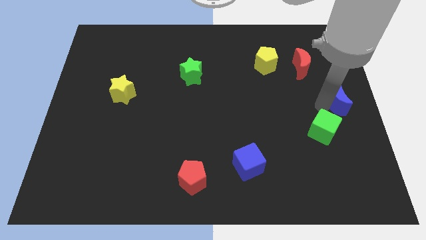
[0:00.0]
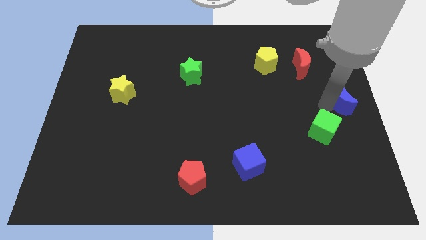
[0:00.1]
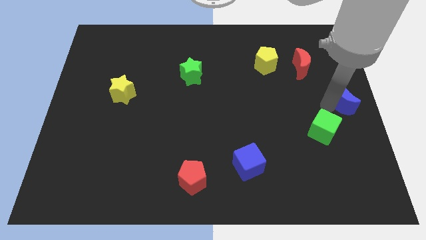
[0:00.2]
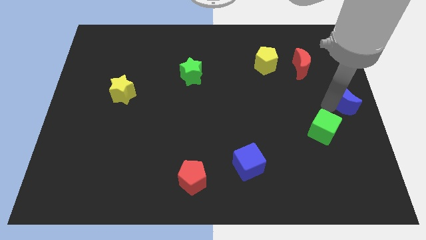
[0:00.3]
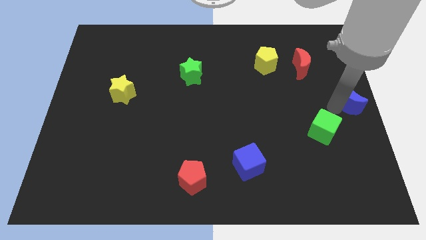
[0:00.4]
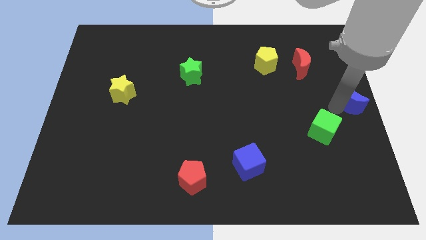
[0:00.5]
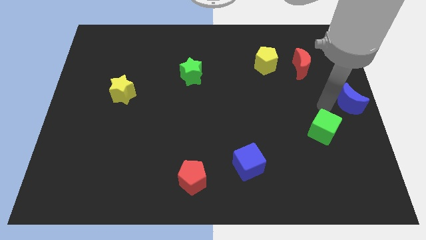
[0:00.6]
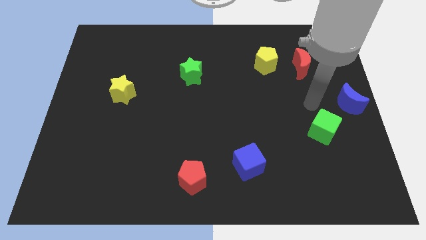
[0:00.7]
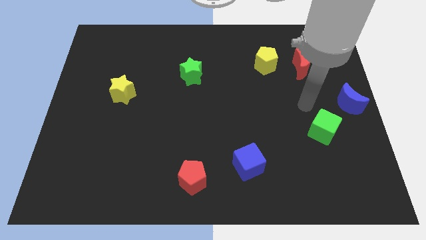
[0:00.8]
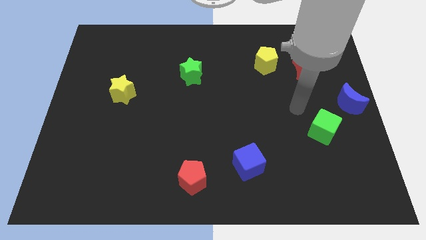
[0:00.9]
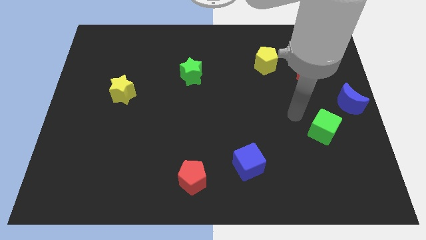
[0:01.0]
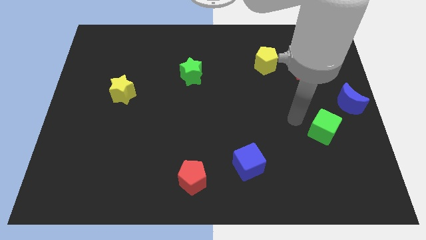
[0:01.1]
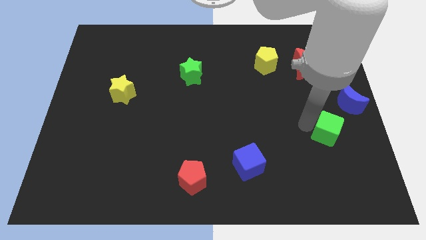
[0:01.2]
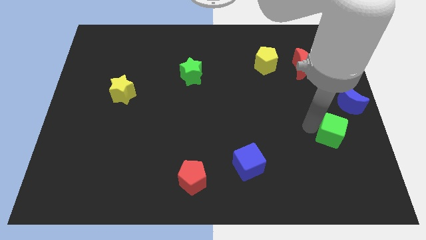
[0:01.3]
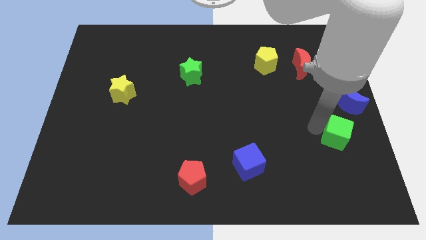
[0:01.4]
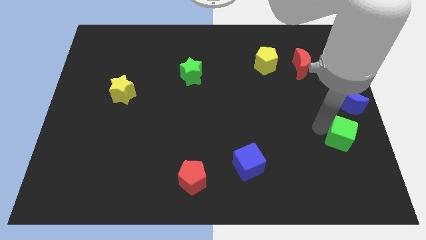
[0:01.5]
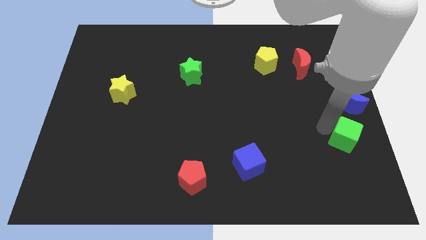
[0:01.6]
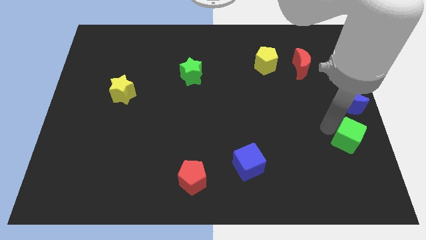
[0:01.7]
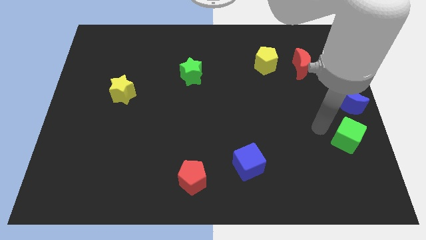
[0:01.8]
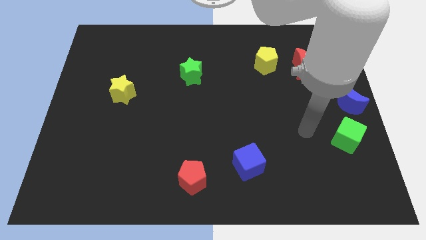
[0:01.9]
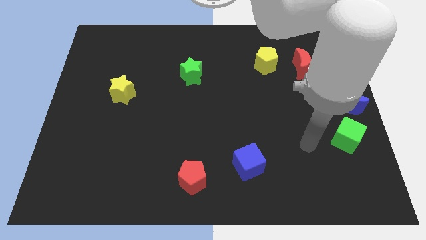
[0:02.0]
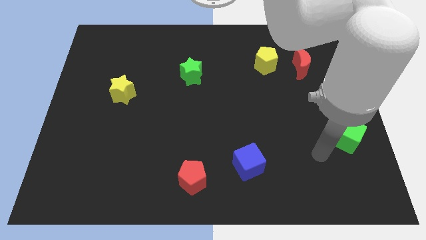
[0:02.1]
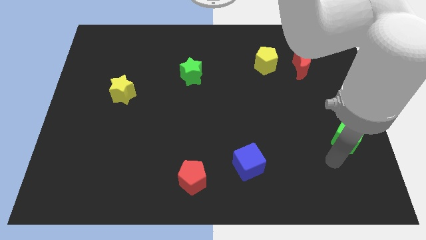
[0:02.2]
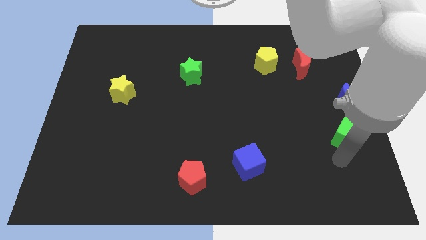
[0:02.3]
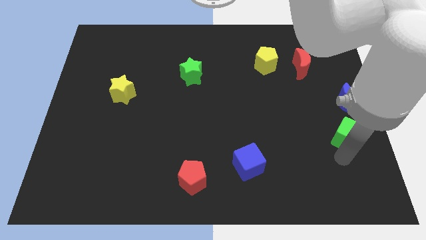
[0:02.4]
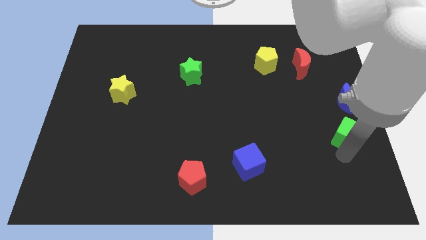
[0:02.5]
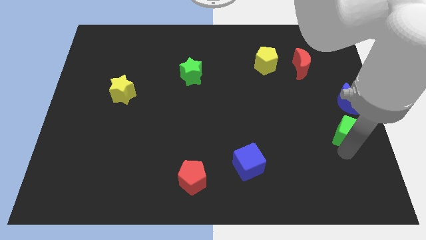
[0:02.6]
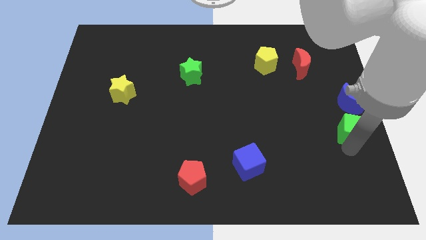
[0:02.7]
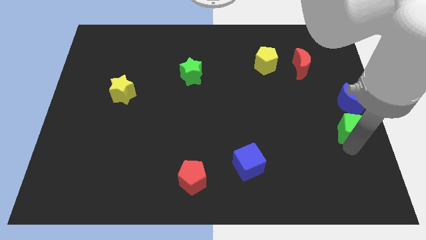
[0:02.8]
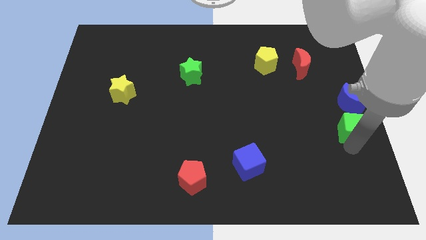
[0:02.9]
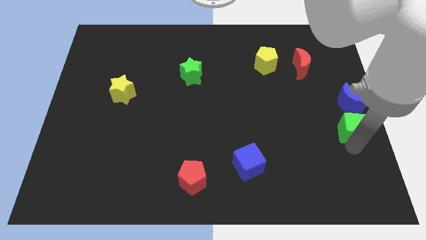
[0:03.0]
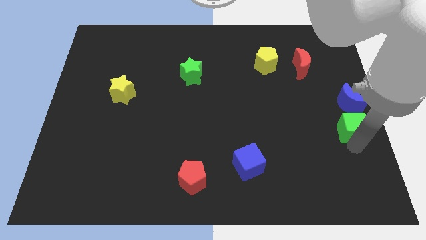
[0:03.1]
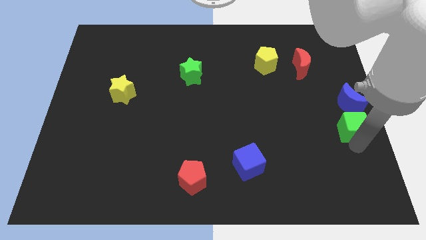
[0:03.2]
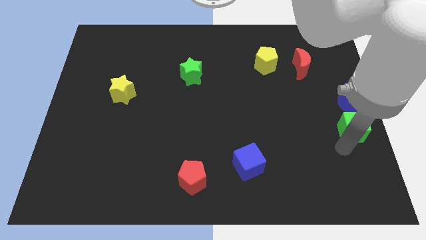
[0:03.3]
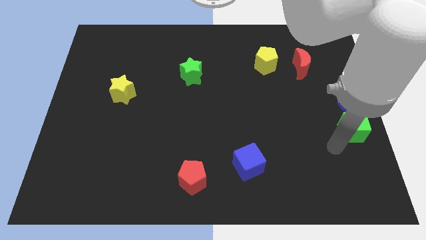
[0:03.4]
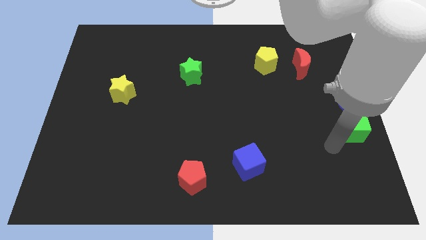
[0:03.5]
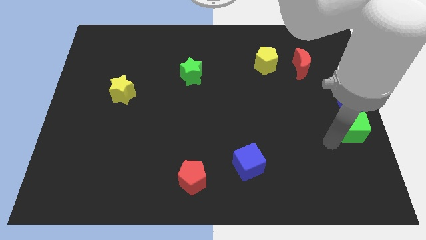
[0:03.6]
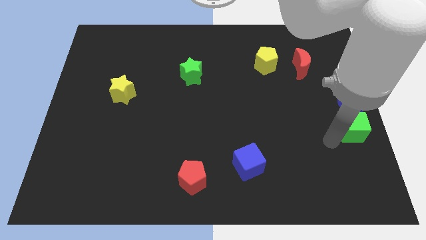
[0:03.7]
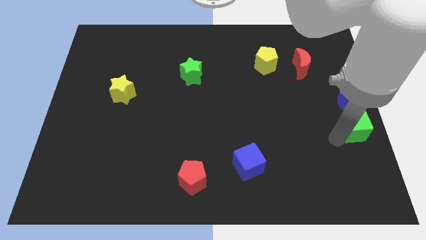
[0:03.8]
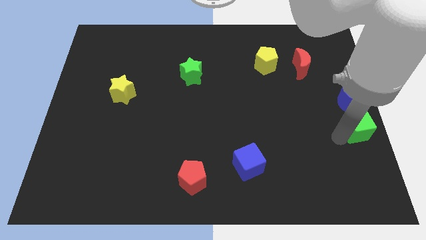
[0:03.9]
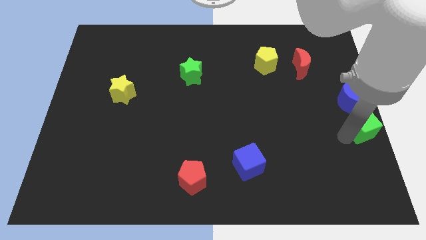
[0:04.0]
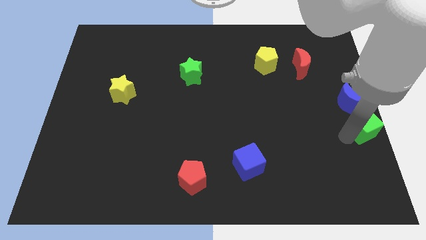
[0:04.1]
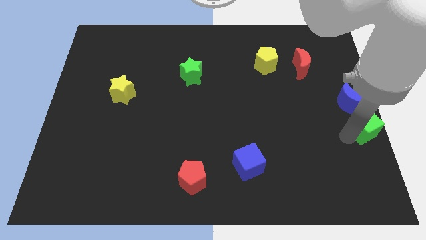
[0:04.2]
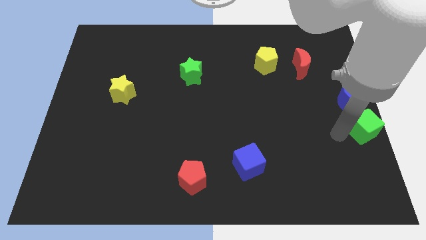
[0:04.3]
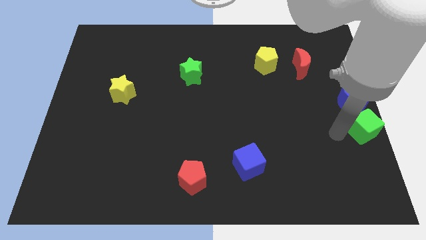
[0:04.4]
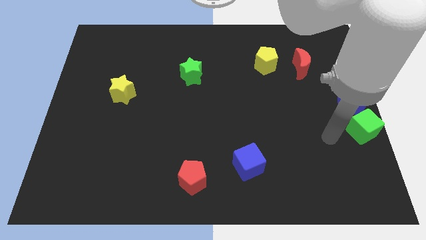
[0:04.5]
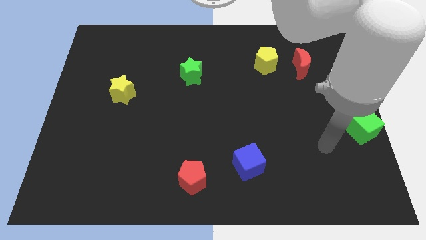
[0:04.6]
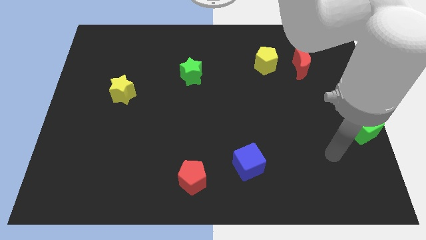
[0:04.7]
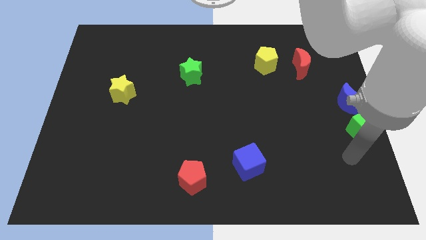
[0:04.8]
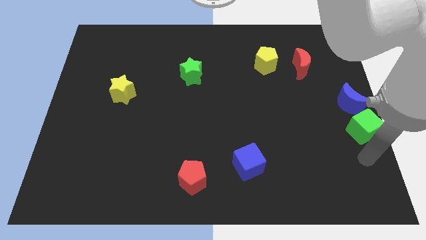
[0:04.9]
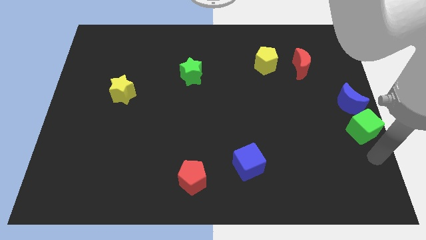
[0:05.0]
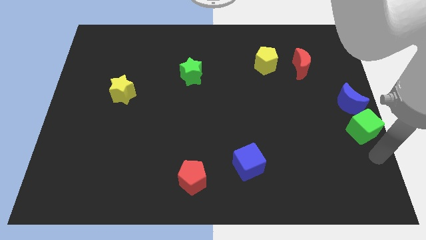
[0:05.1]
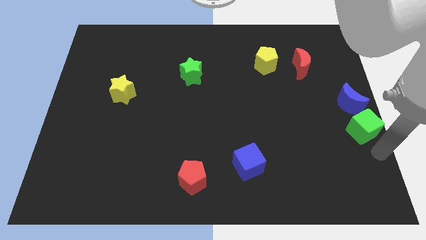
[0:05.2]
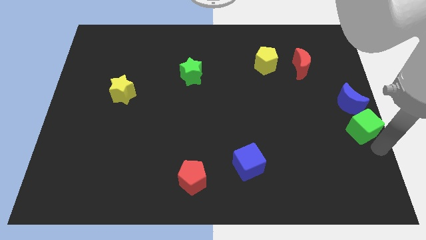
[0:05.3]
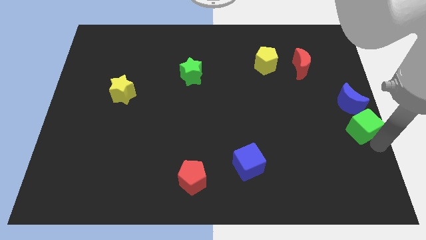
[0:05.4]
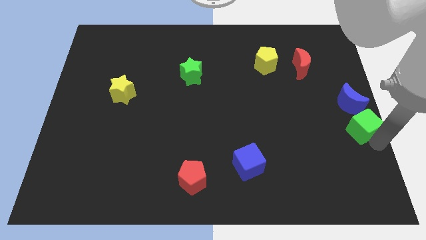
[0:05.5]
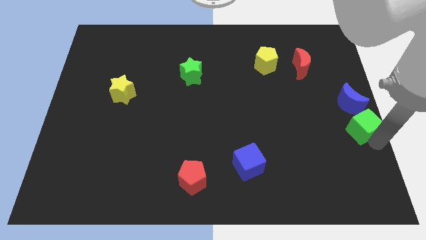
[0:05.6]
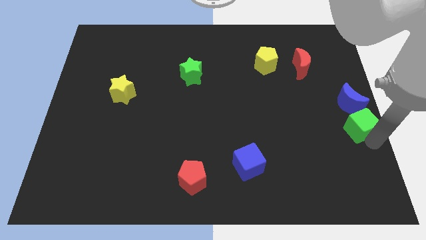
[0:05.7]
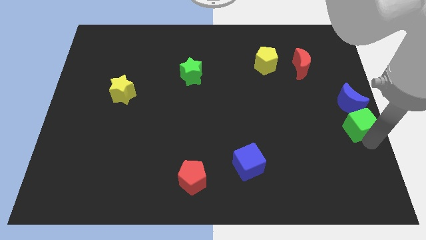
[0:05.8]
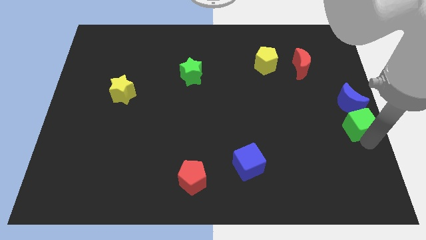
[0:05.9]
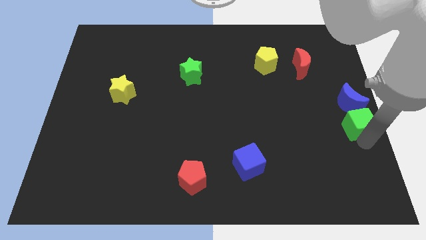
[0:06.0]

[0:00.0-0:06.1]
put the blue crescent and the green cube together at the center right of the board

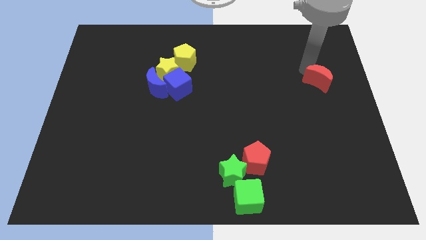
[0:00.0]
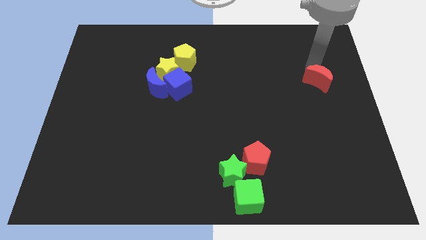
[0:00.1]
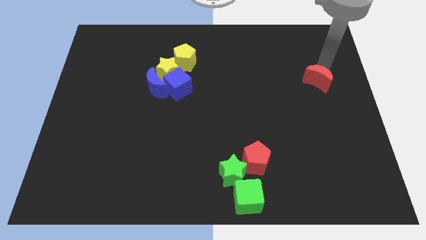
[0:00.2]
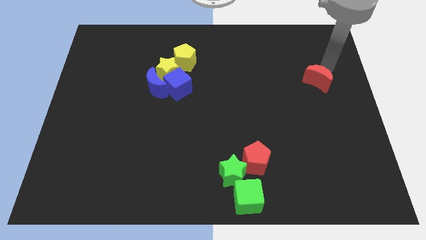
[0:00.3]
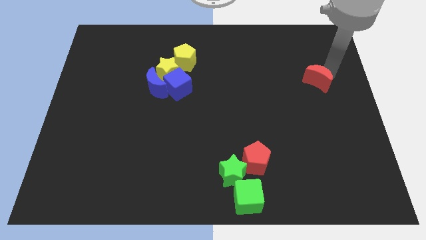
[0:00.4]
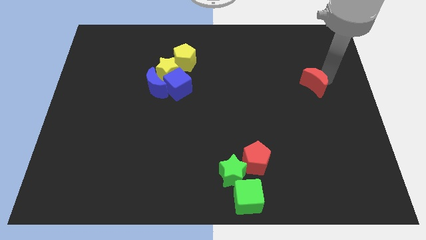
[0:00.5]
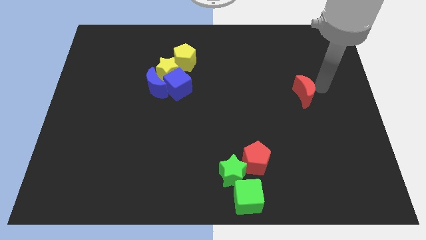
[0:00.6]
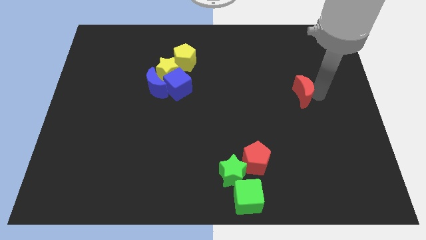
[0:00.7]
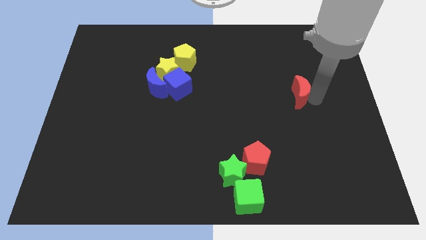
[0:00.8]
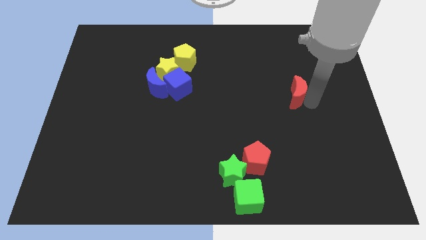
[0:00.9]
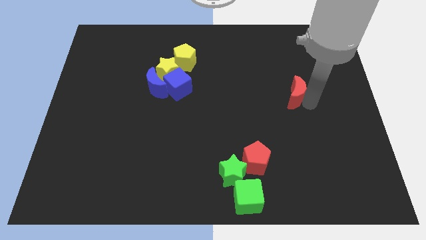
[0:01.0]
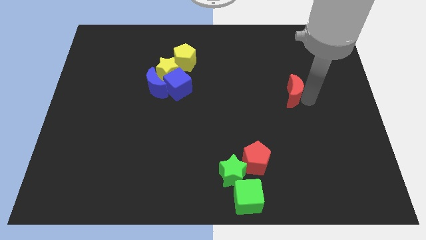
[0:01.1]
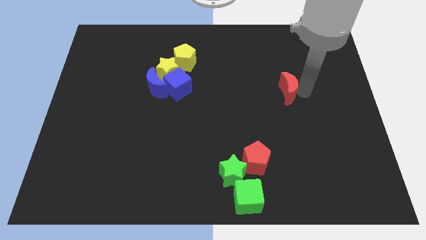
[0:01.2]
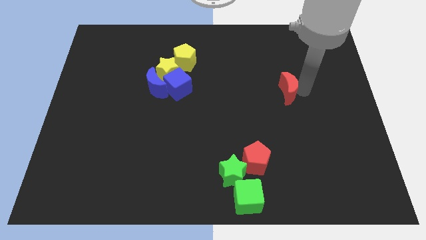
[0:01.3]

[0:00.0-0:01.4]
slightly move the red crescent to the left side

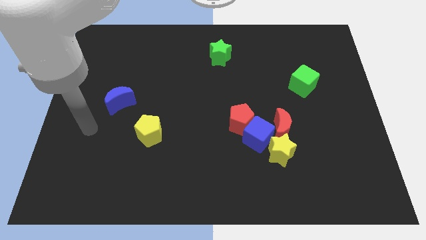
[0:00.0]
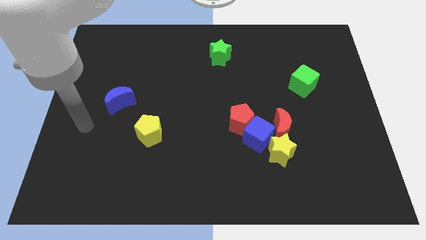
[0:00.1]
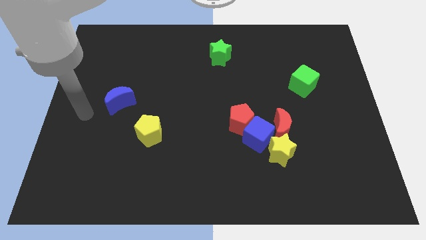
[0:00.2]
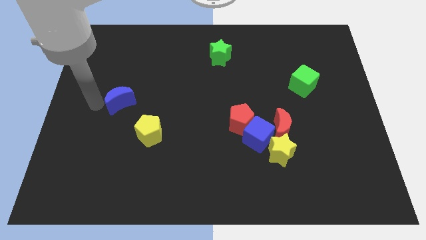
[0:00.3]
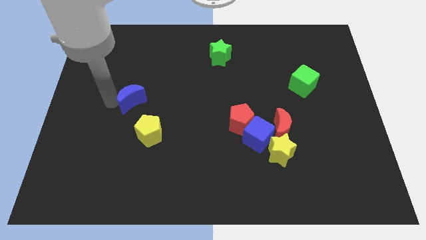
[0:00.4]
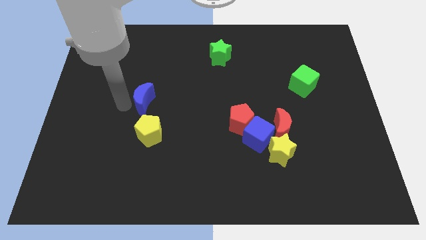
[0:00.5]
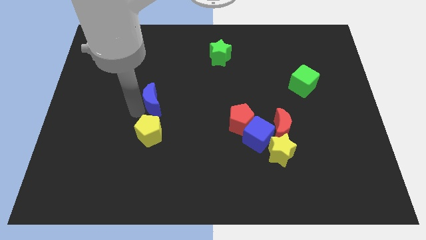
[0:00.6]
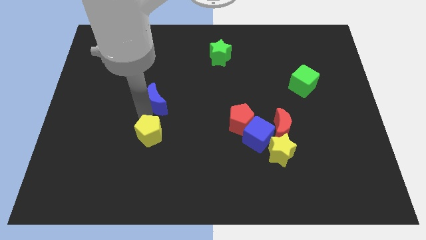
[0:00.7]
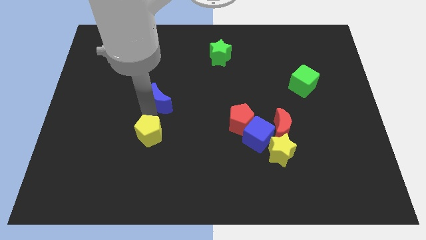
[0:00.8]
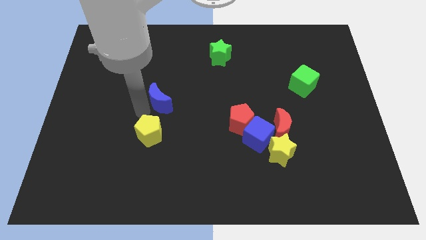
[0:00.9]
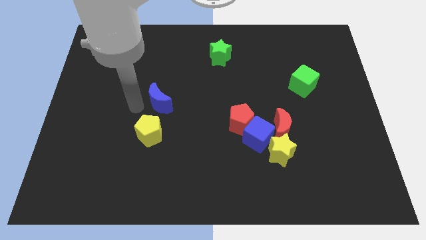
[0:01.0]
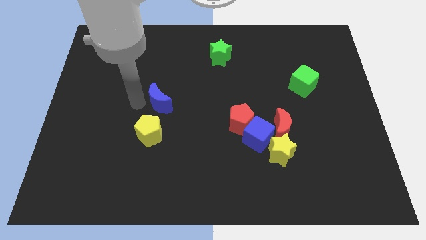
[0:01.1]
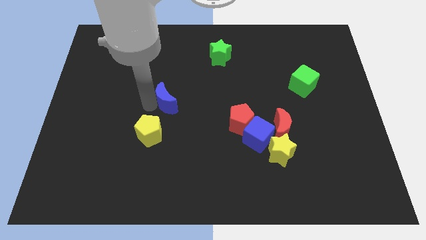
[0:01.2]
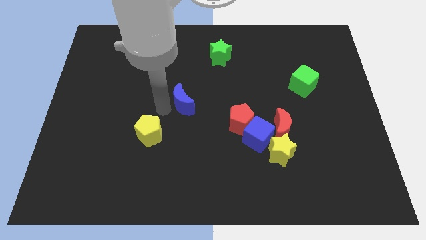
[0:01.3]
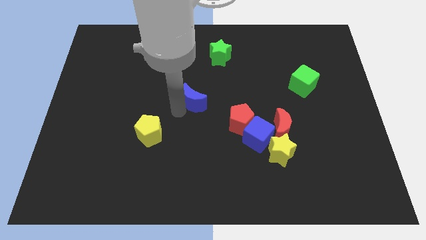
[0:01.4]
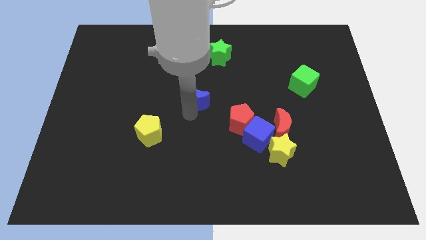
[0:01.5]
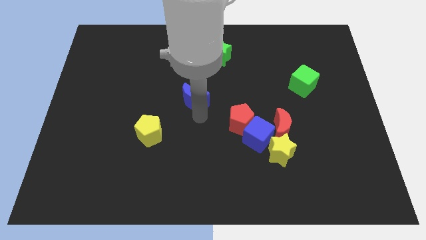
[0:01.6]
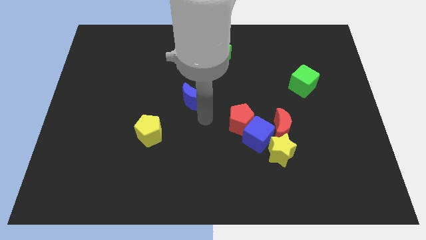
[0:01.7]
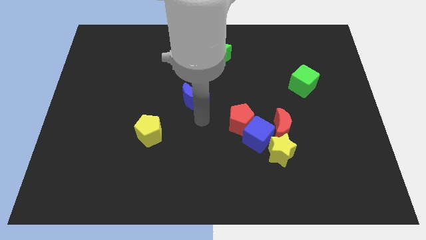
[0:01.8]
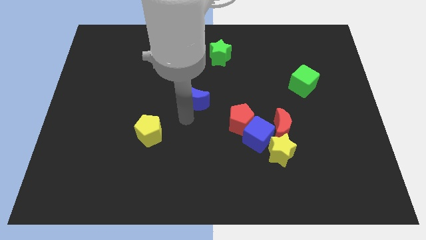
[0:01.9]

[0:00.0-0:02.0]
put the blue moon diagonal left of red pentagon
